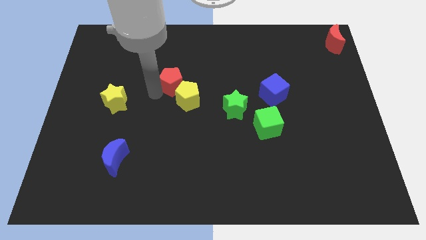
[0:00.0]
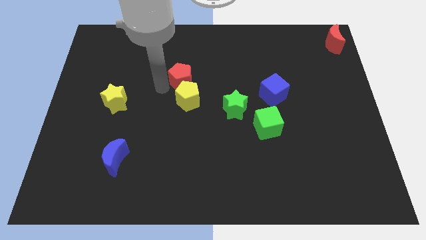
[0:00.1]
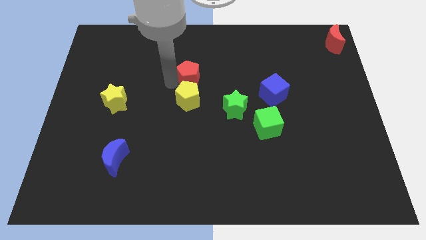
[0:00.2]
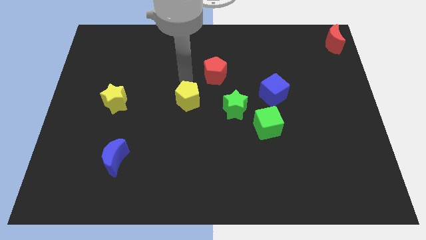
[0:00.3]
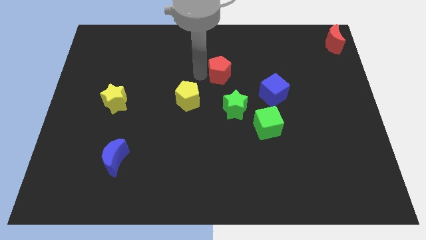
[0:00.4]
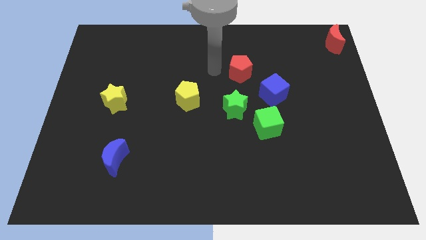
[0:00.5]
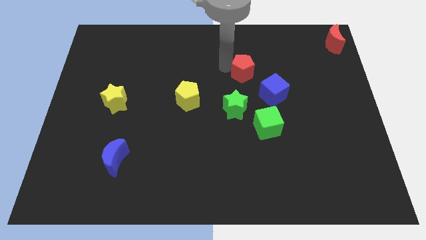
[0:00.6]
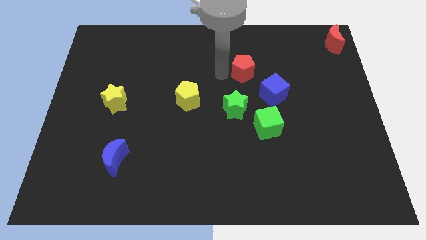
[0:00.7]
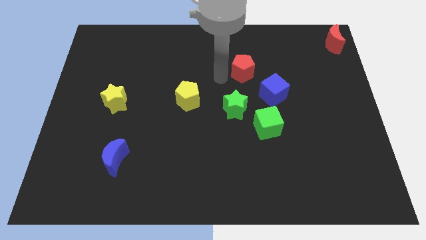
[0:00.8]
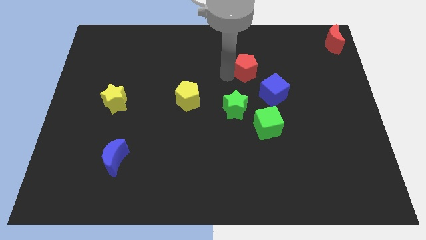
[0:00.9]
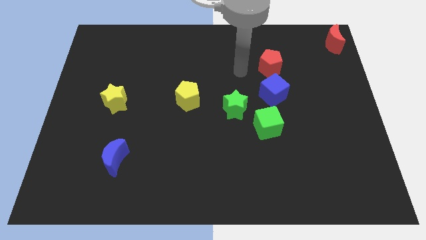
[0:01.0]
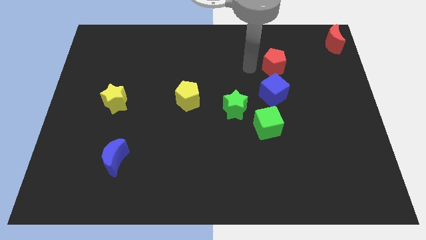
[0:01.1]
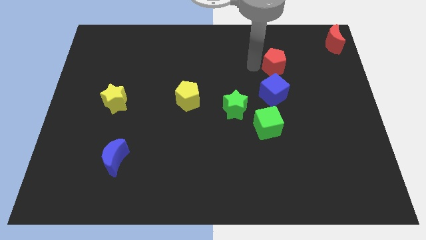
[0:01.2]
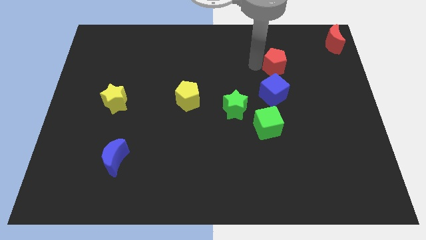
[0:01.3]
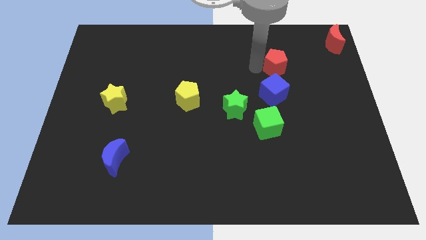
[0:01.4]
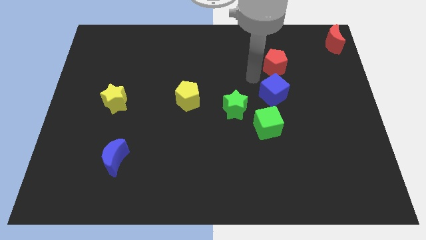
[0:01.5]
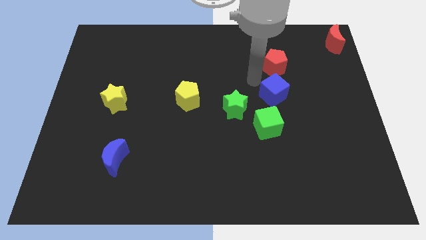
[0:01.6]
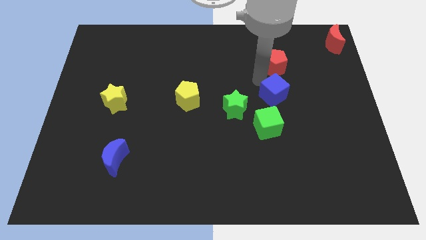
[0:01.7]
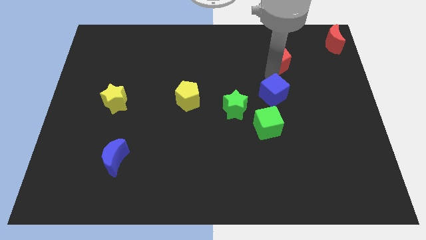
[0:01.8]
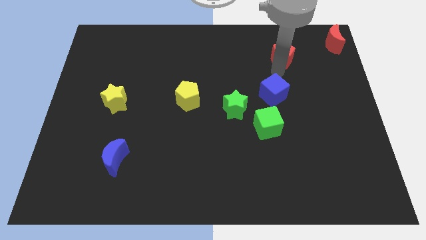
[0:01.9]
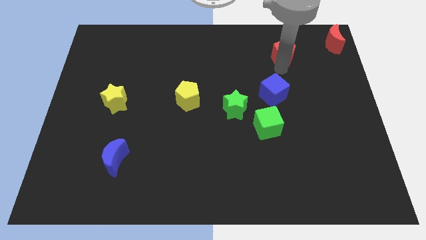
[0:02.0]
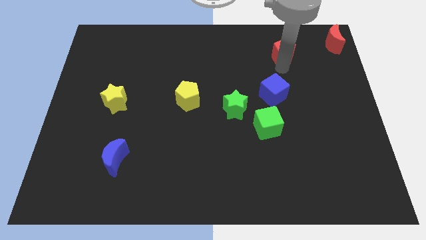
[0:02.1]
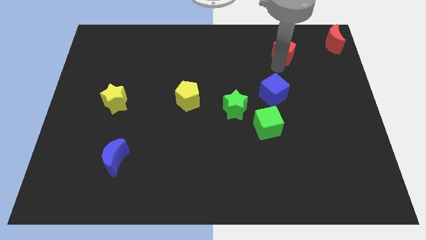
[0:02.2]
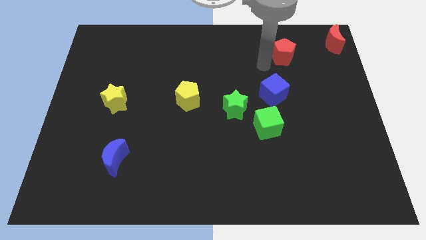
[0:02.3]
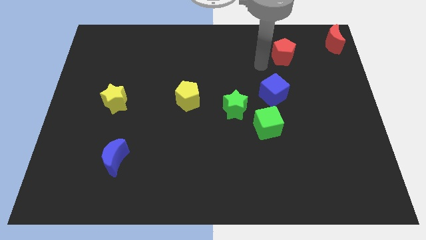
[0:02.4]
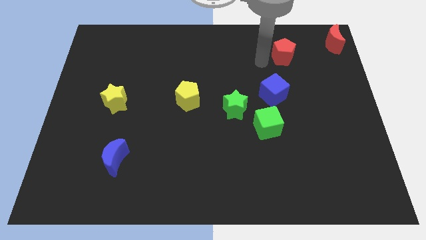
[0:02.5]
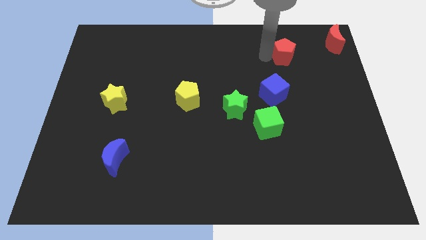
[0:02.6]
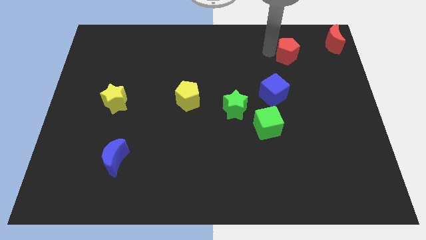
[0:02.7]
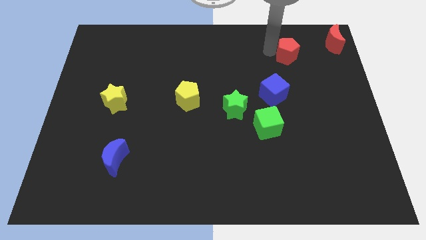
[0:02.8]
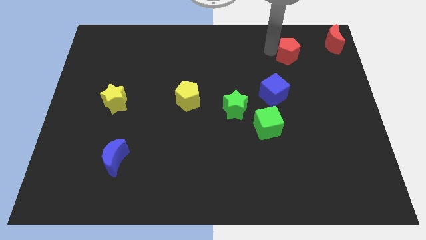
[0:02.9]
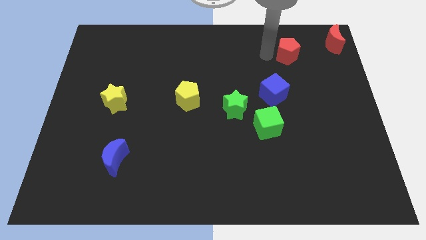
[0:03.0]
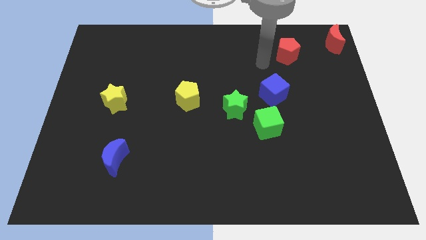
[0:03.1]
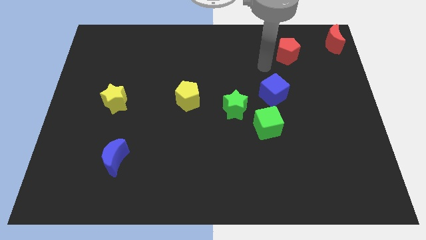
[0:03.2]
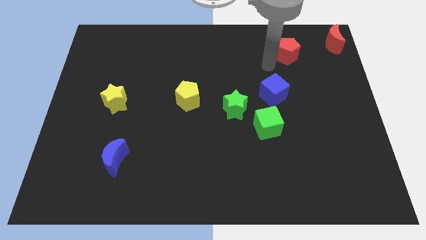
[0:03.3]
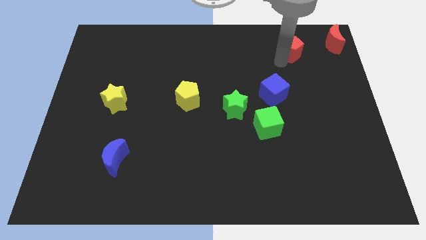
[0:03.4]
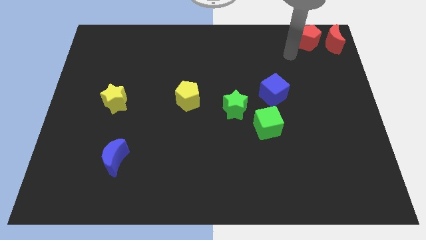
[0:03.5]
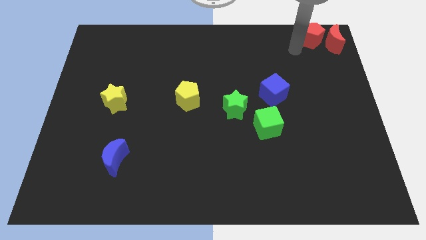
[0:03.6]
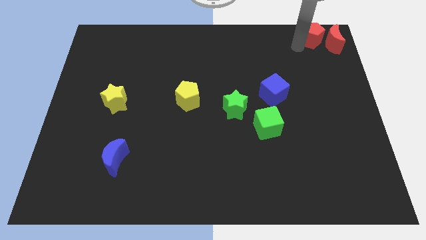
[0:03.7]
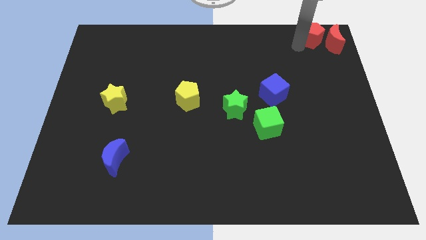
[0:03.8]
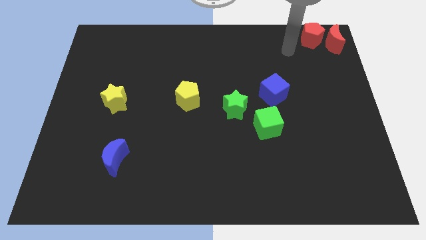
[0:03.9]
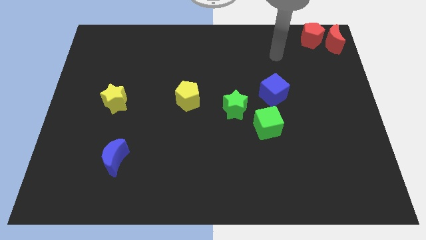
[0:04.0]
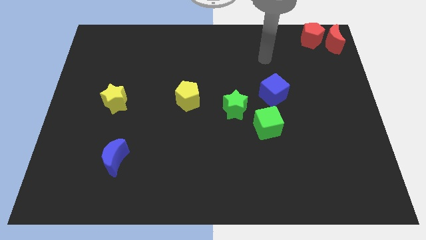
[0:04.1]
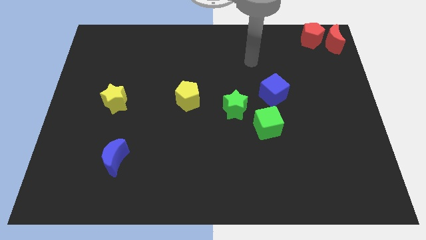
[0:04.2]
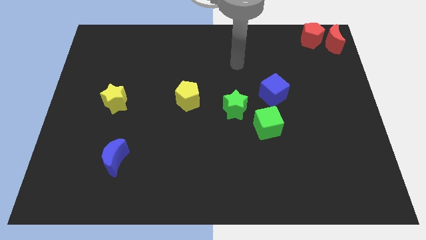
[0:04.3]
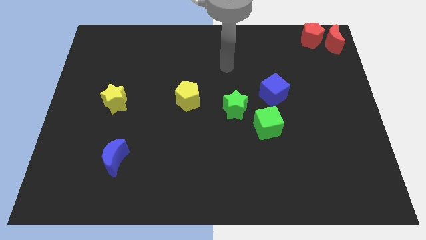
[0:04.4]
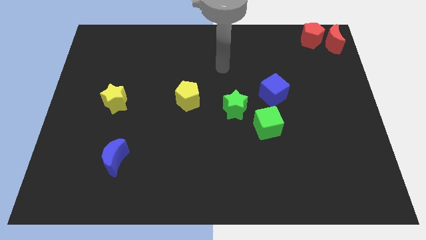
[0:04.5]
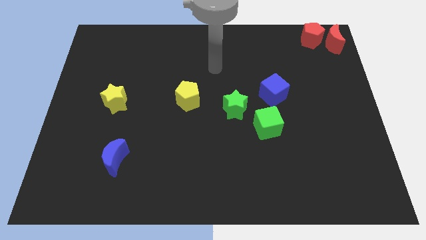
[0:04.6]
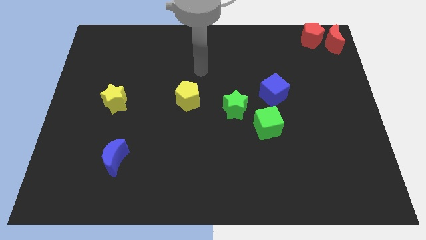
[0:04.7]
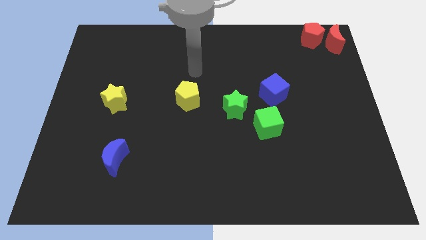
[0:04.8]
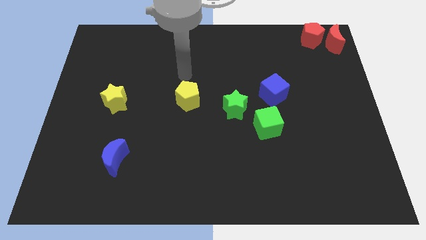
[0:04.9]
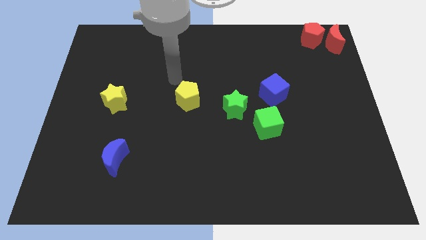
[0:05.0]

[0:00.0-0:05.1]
drag the red pentagon to the left of the red crescent

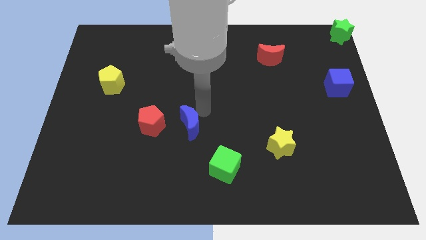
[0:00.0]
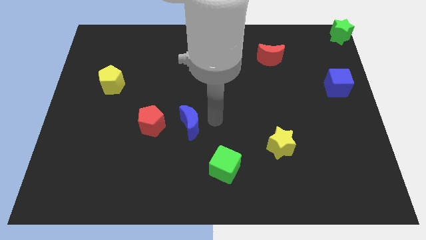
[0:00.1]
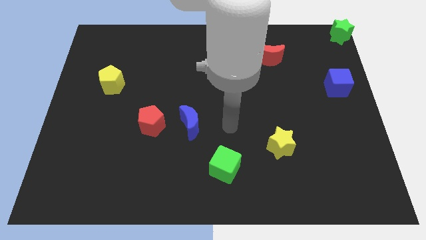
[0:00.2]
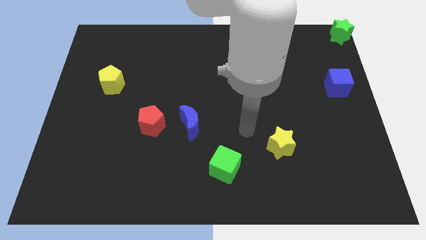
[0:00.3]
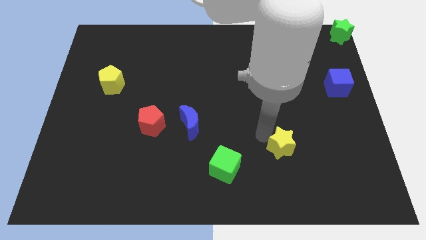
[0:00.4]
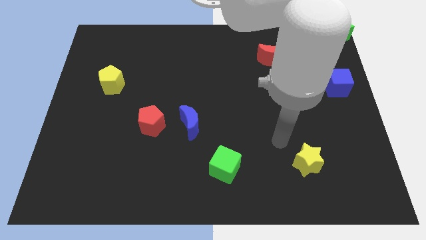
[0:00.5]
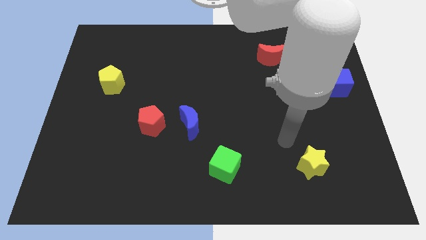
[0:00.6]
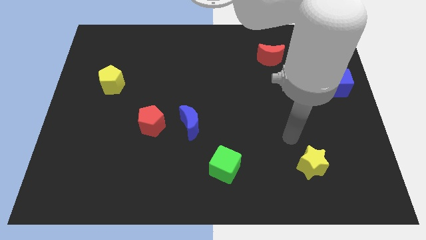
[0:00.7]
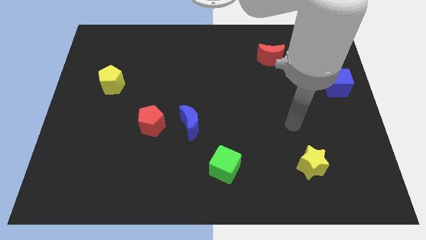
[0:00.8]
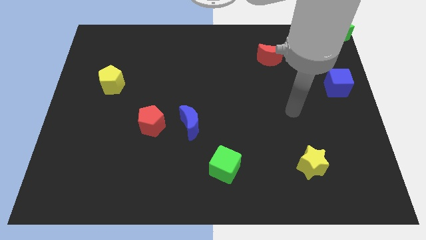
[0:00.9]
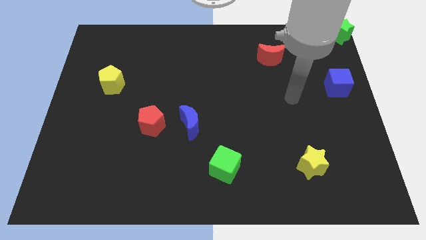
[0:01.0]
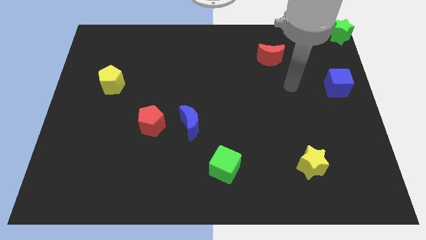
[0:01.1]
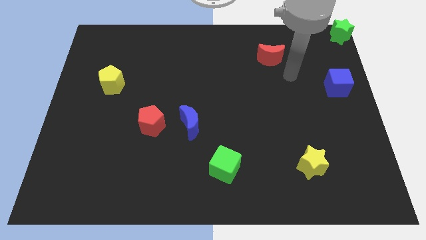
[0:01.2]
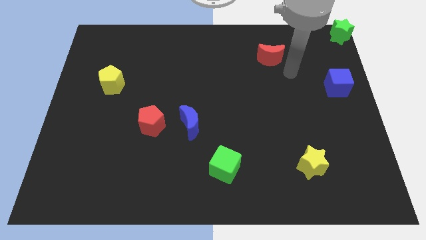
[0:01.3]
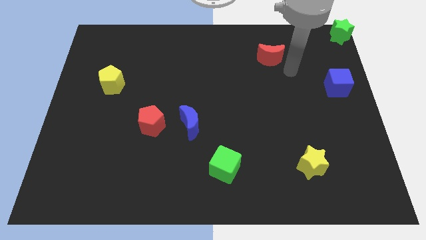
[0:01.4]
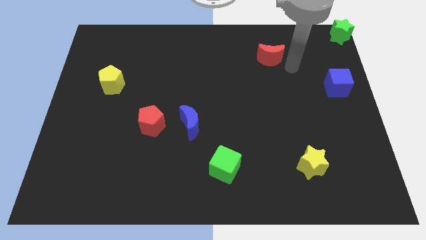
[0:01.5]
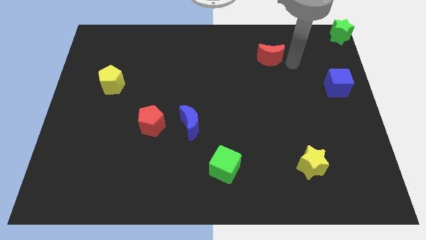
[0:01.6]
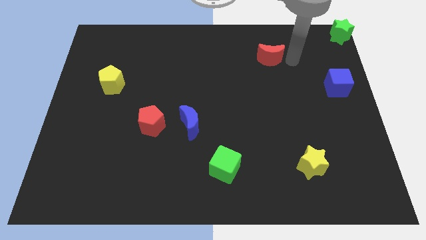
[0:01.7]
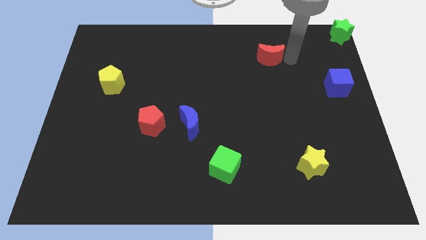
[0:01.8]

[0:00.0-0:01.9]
push the yellow star to the right of the green cube

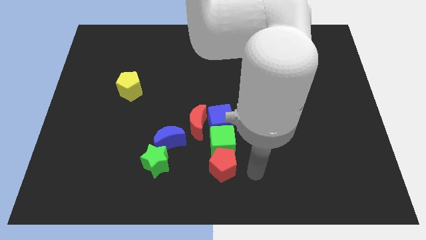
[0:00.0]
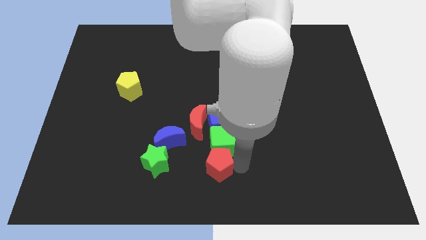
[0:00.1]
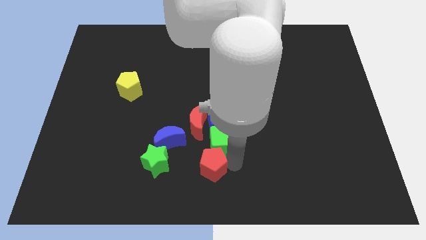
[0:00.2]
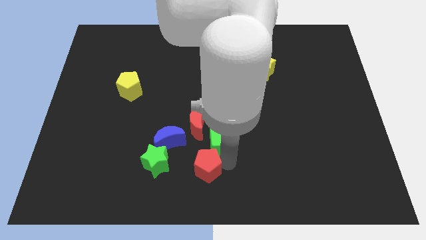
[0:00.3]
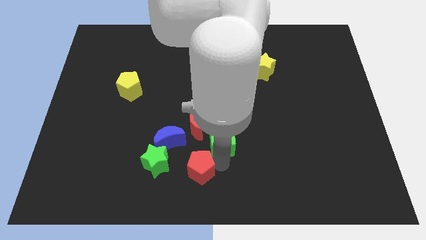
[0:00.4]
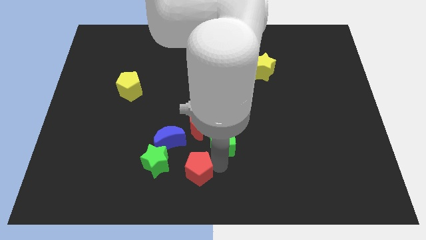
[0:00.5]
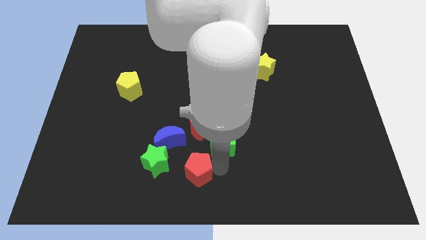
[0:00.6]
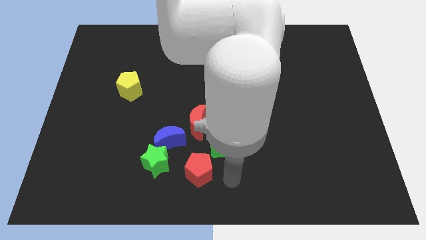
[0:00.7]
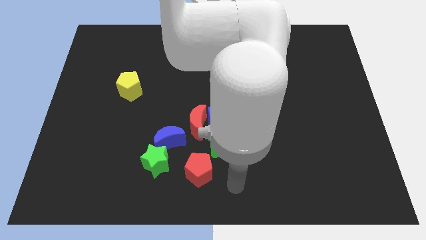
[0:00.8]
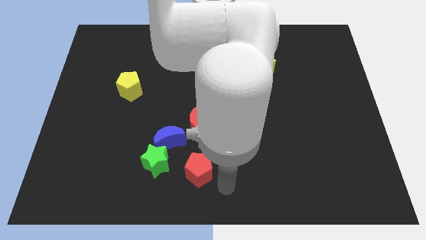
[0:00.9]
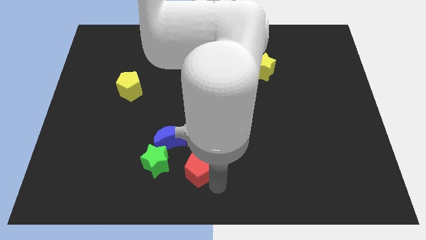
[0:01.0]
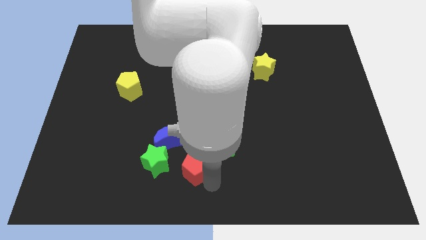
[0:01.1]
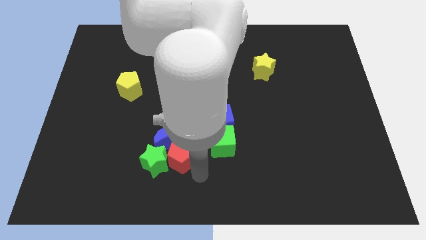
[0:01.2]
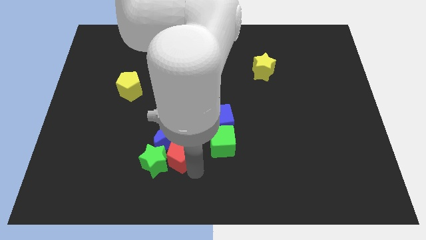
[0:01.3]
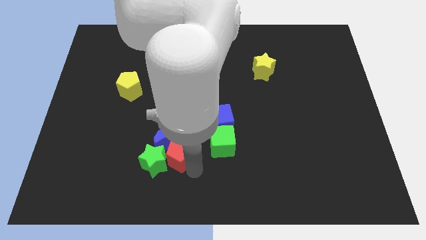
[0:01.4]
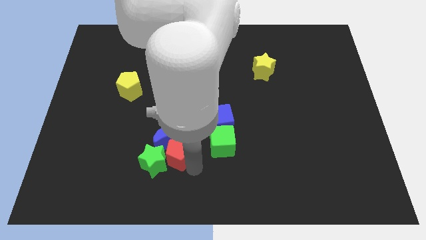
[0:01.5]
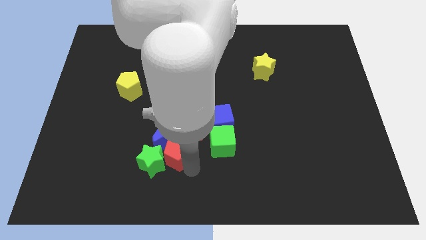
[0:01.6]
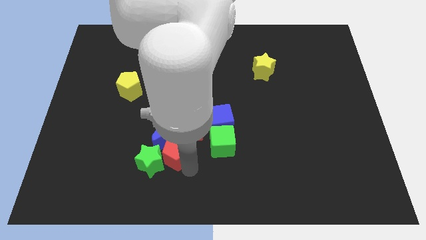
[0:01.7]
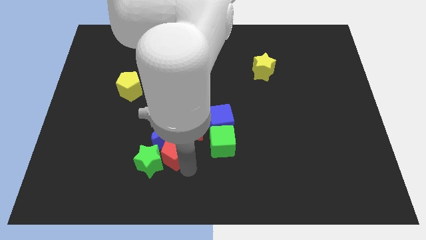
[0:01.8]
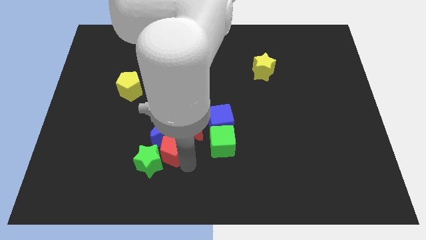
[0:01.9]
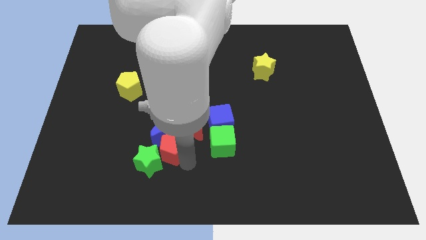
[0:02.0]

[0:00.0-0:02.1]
push the red pentagon into blue crescent

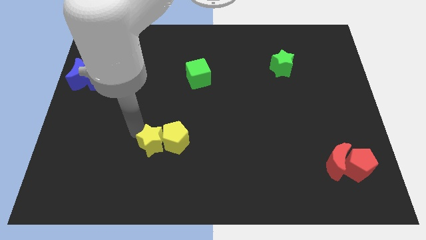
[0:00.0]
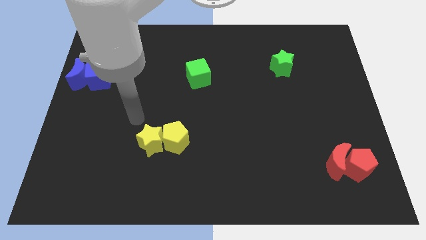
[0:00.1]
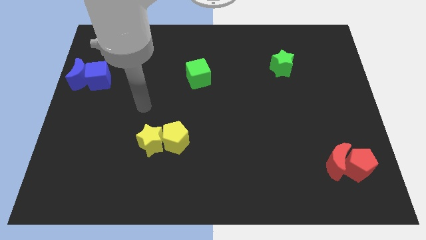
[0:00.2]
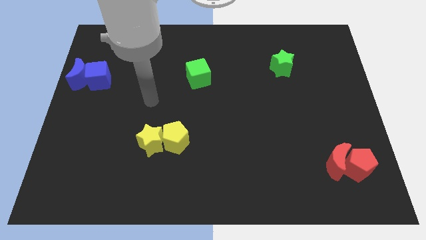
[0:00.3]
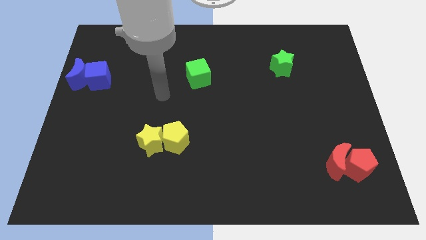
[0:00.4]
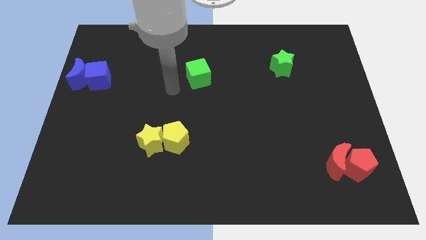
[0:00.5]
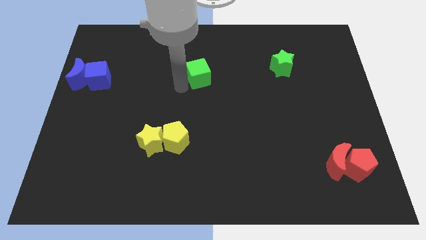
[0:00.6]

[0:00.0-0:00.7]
point your arm to the left of the green cube
